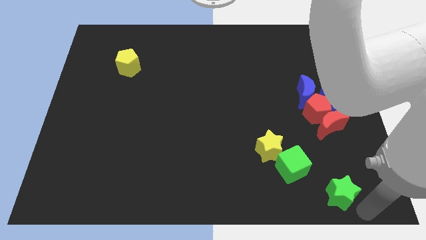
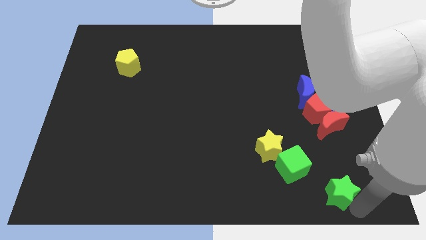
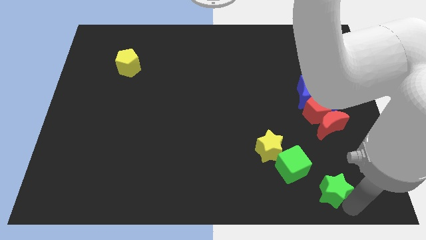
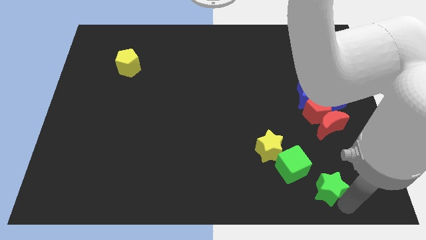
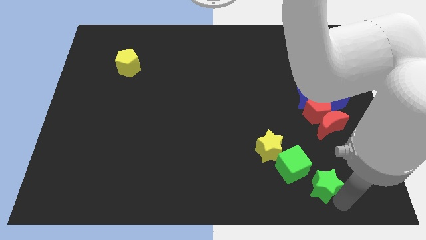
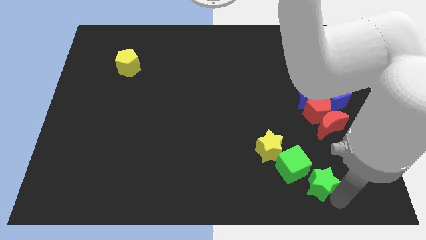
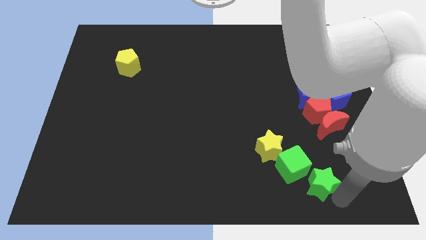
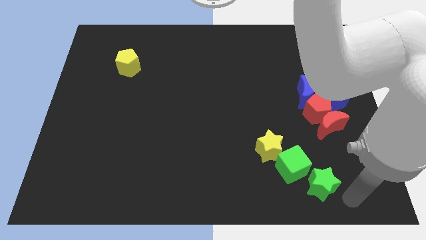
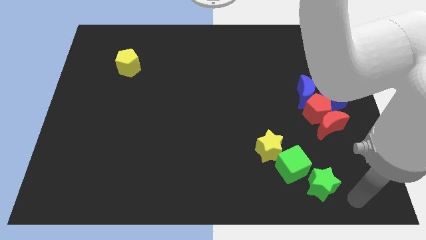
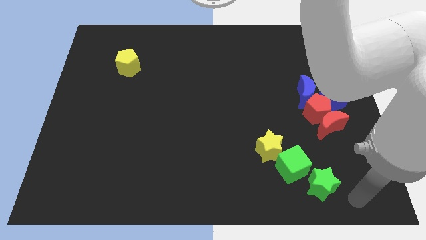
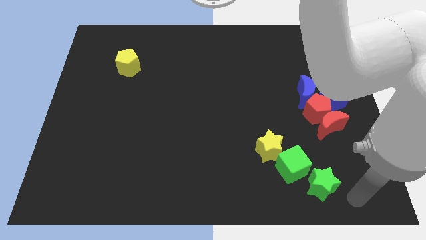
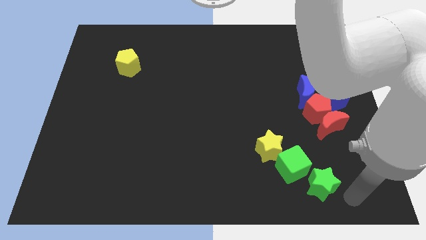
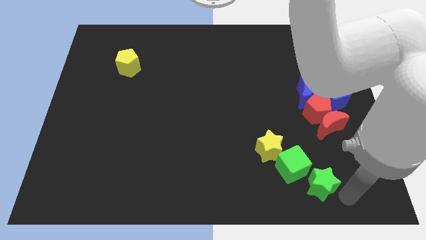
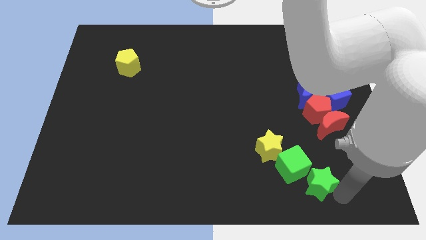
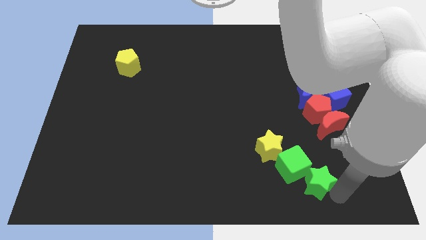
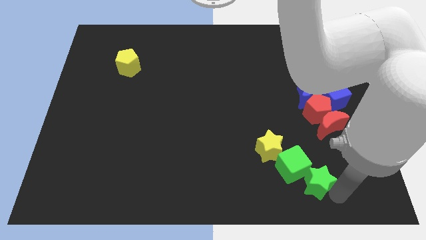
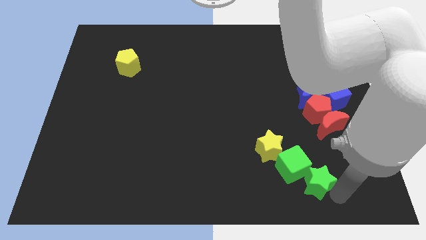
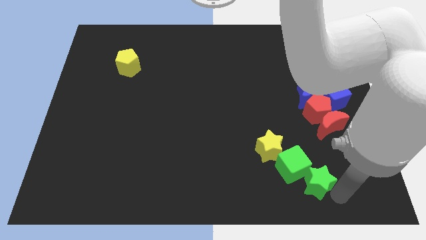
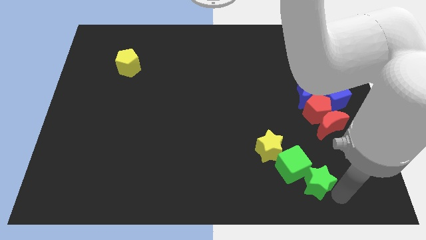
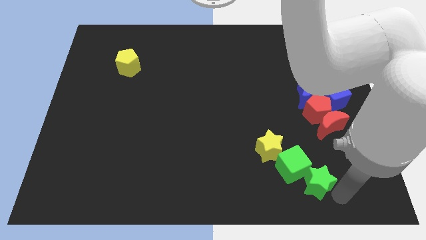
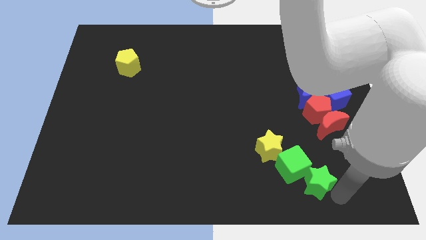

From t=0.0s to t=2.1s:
push green star into green cube

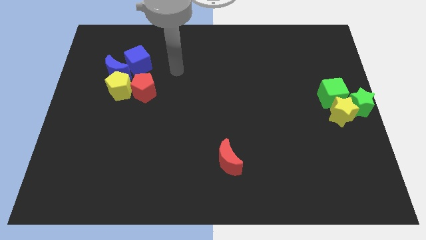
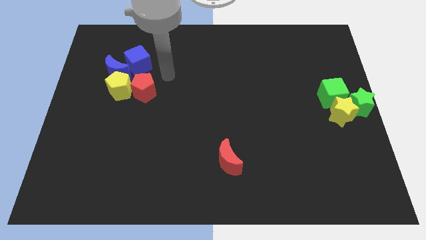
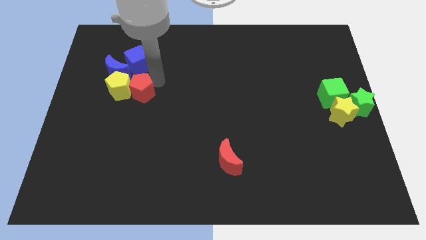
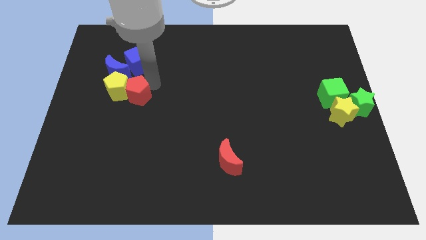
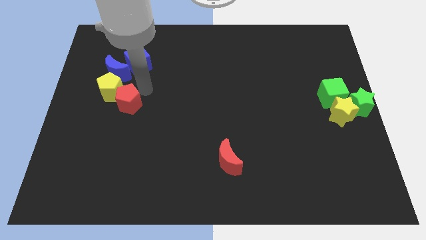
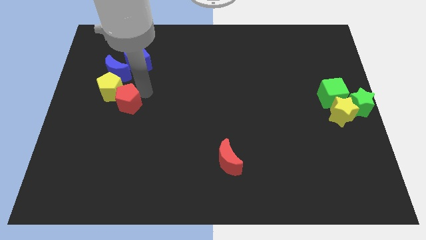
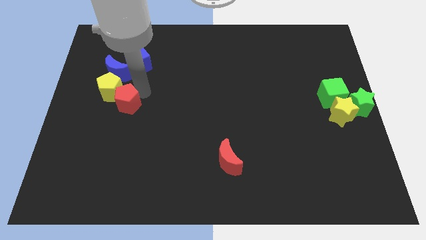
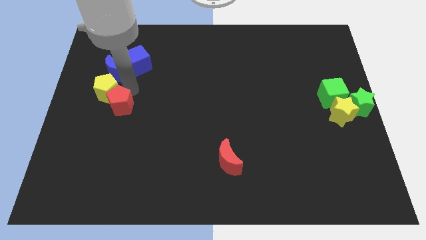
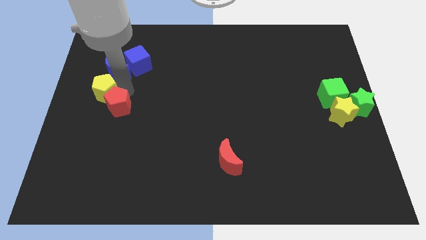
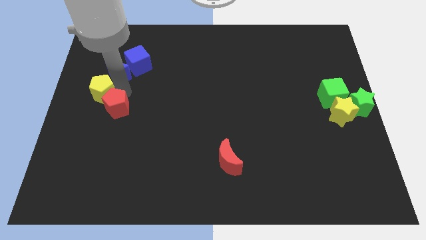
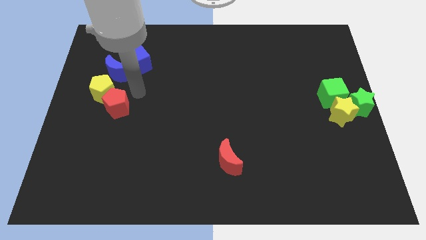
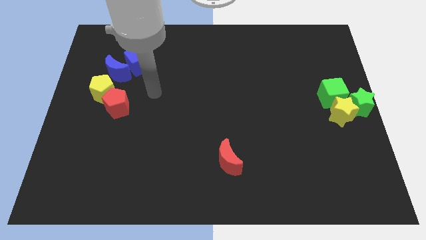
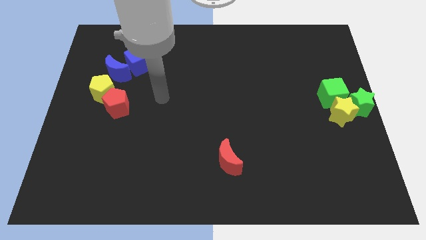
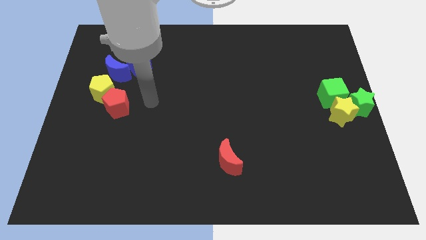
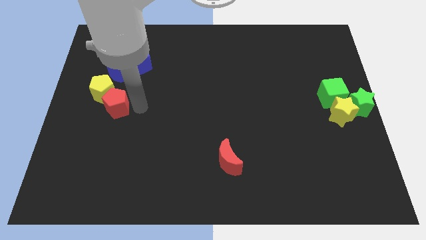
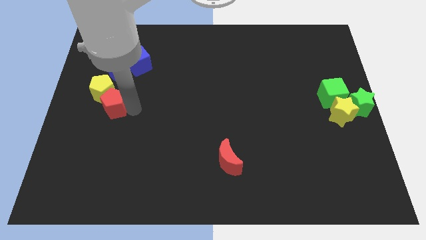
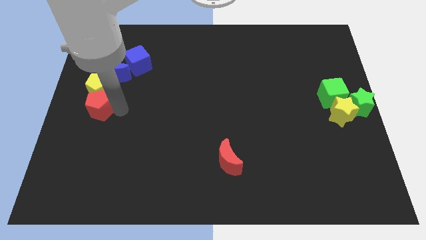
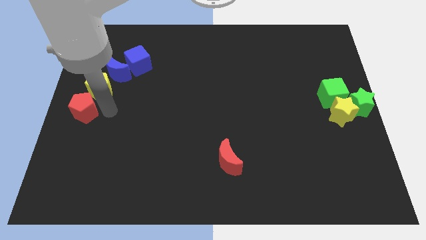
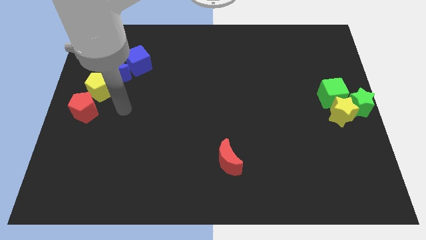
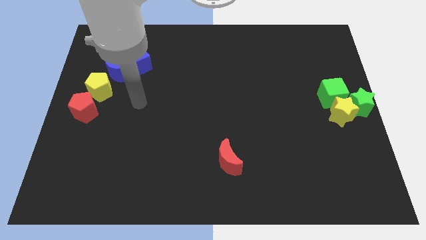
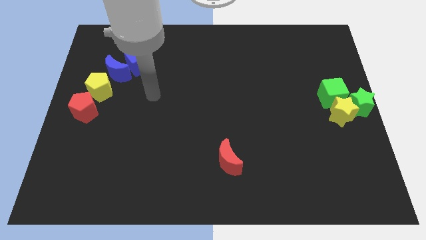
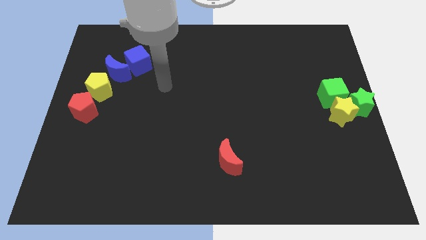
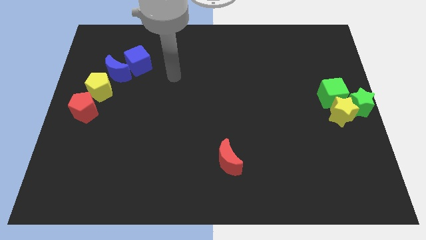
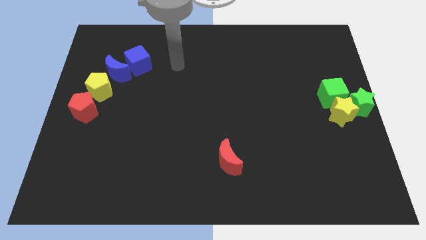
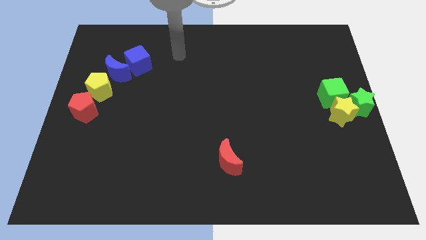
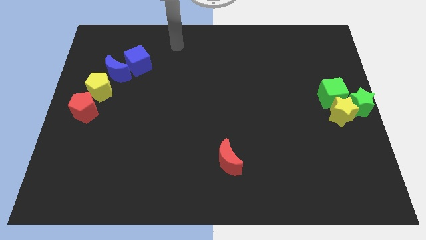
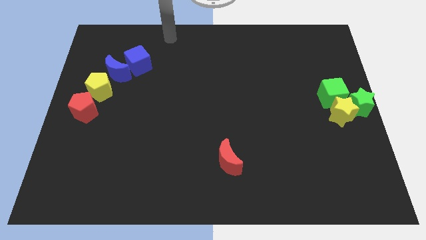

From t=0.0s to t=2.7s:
move red pentagon and yellow pentagon towards center left

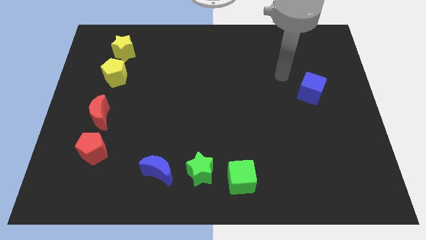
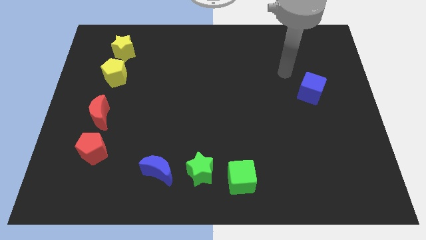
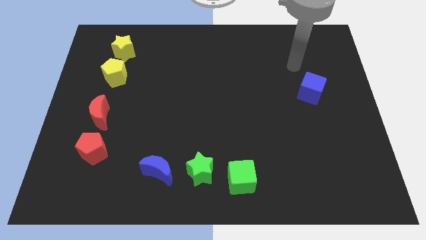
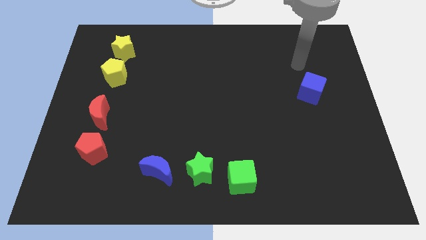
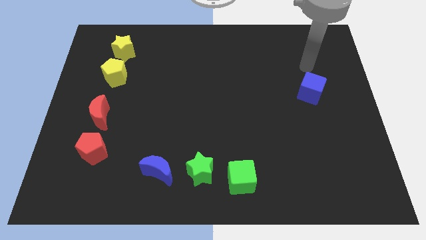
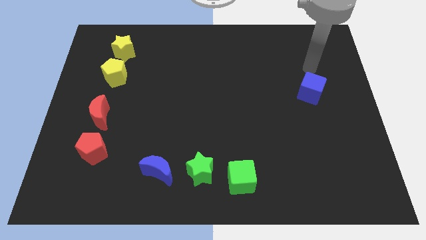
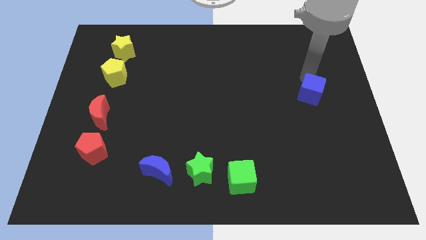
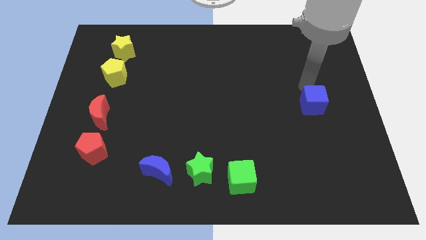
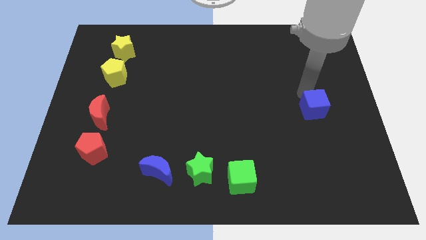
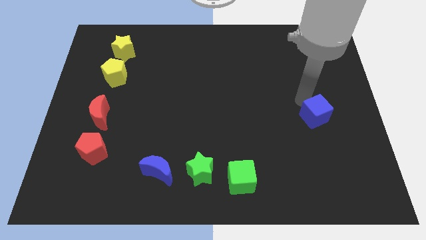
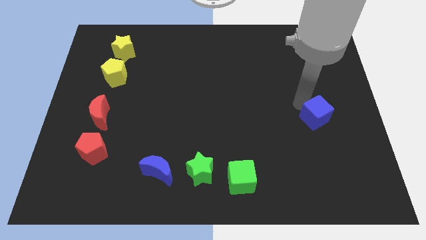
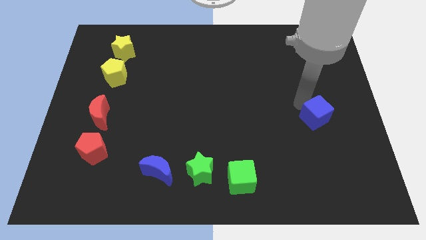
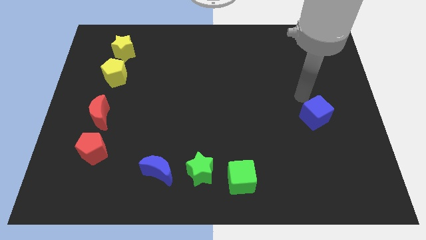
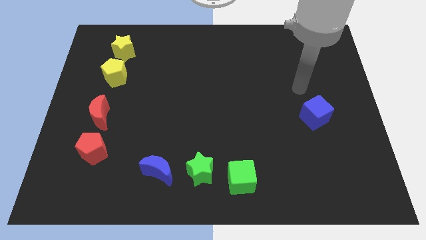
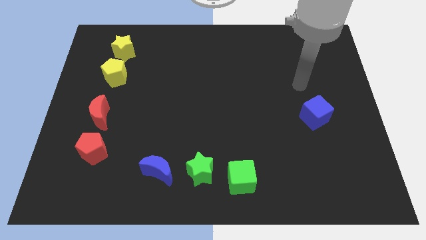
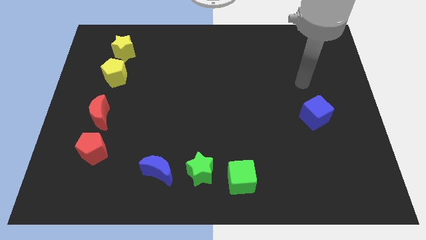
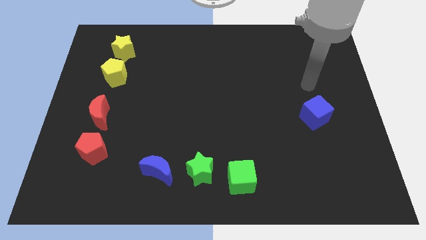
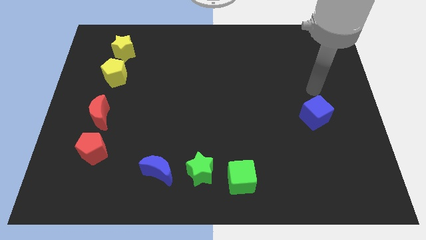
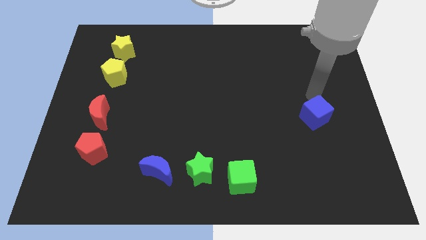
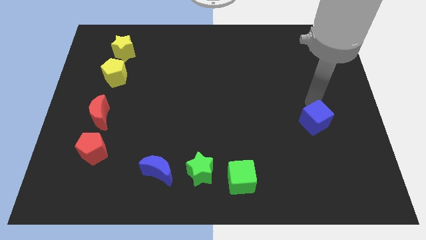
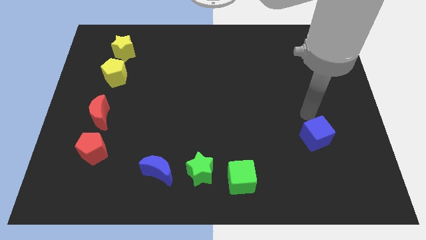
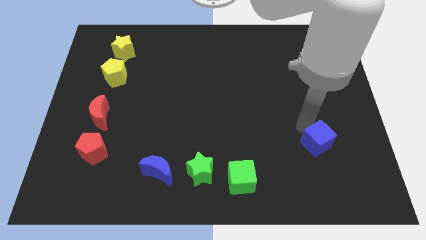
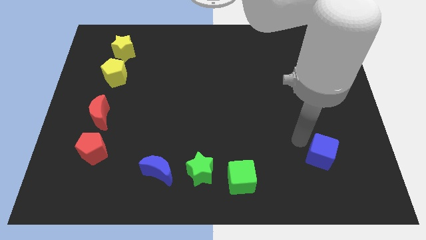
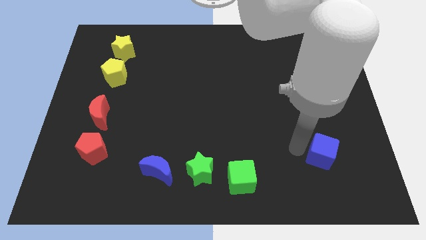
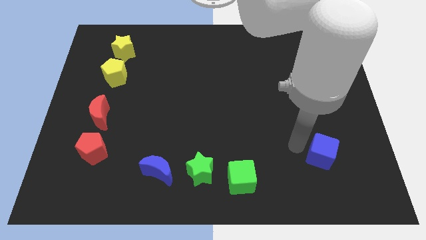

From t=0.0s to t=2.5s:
move the blue cube to wards the green cube diagonally

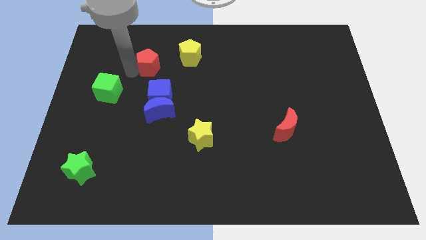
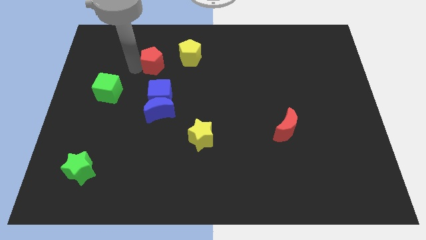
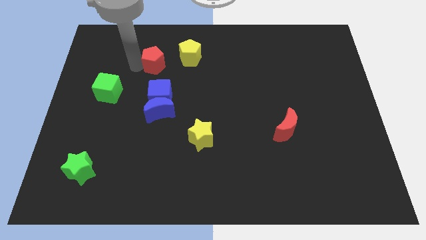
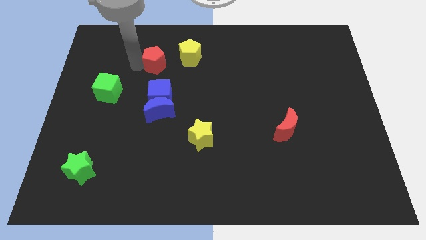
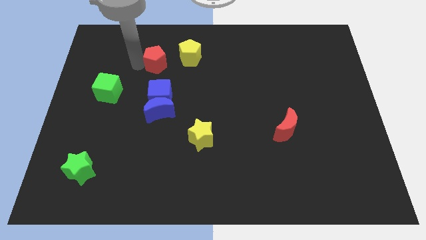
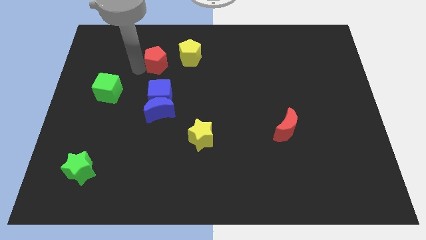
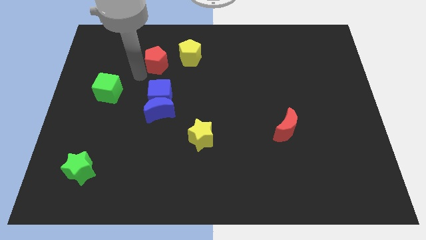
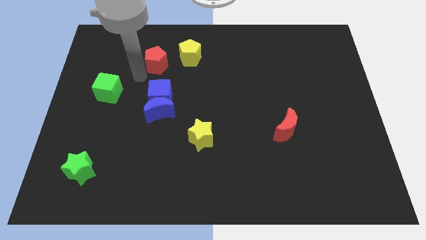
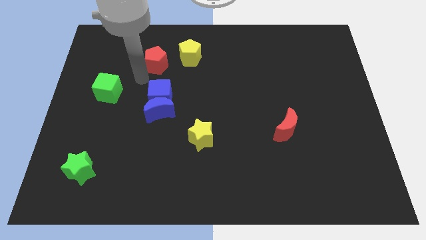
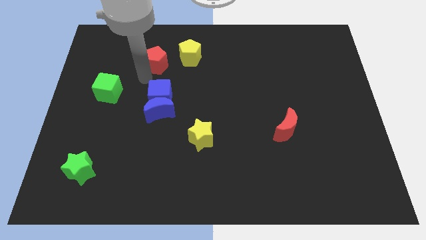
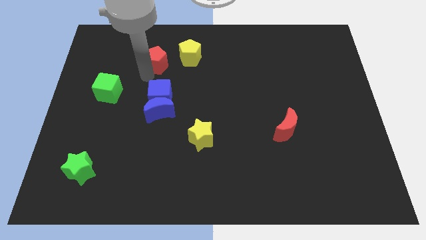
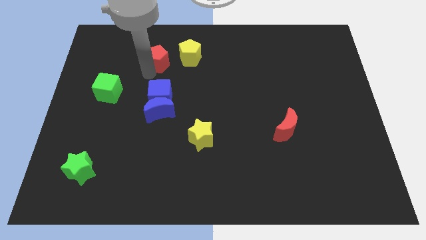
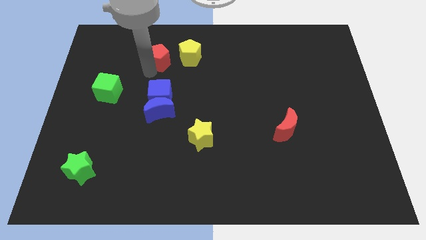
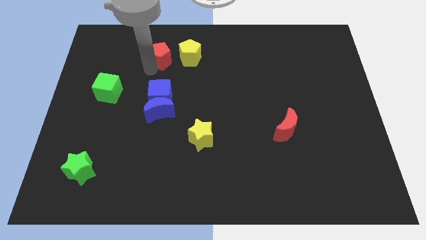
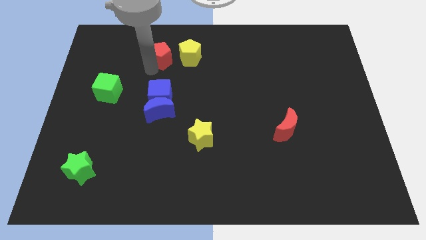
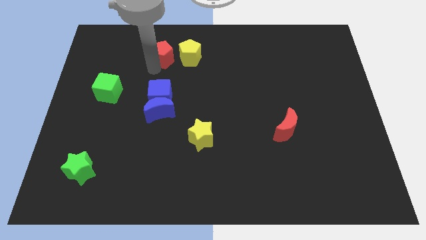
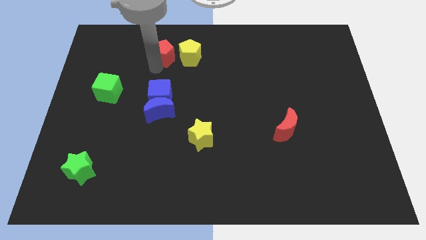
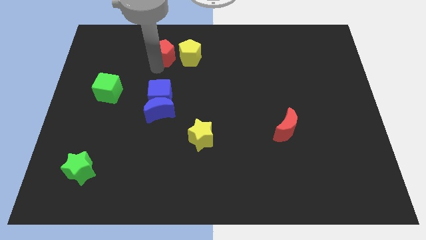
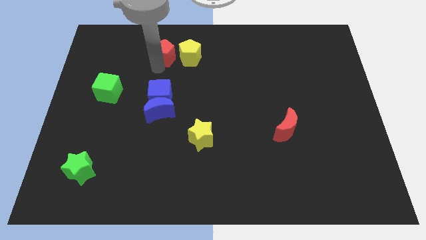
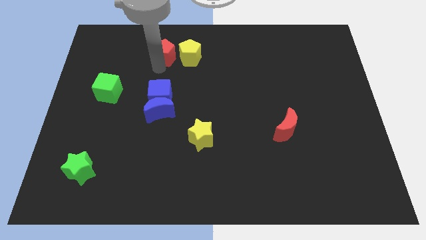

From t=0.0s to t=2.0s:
put the red pentagon on the left side of the yellow pentagon
